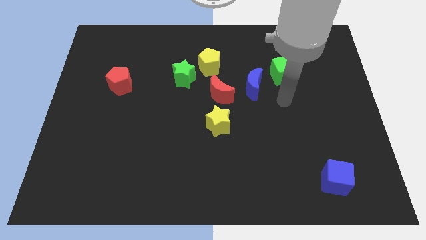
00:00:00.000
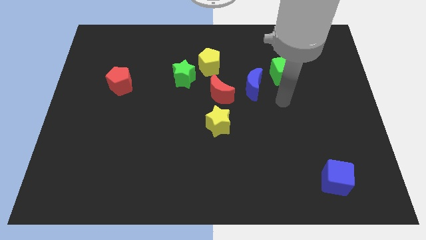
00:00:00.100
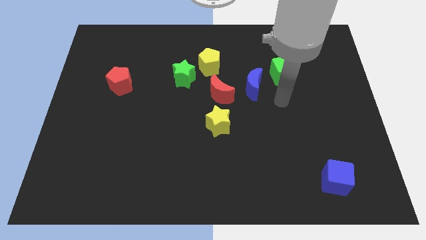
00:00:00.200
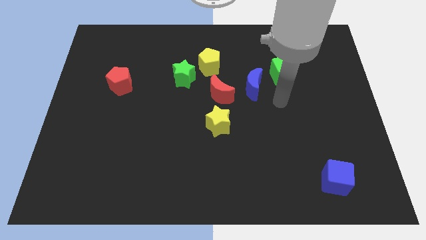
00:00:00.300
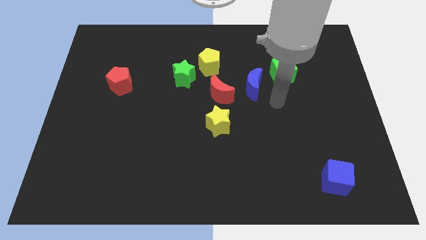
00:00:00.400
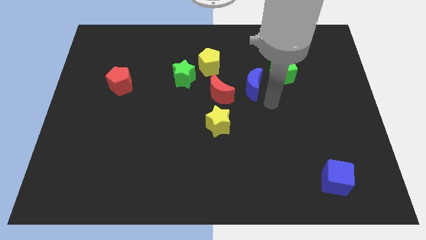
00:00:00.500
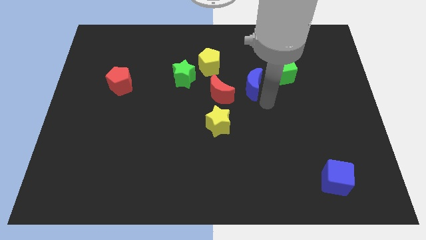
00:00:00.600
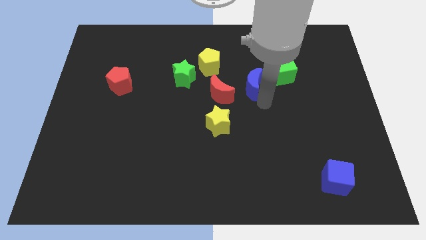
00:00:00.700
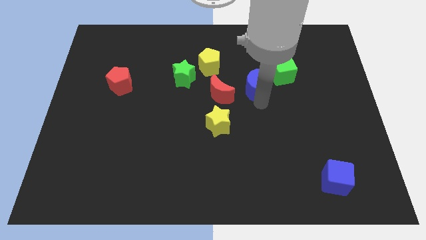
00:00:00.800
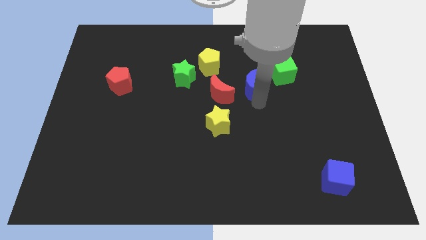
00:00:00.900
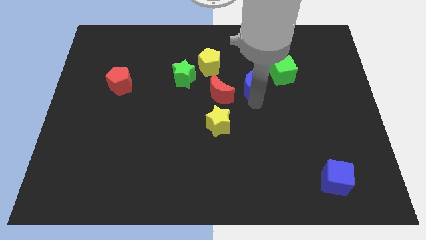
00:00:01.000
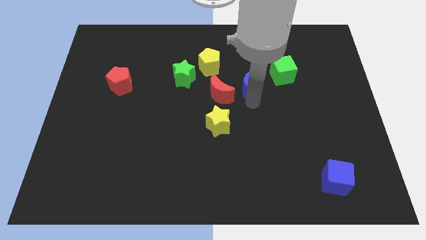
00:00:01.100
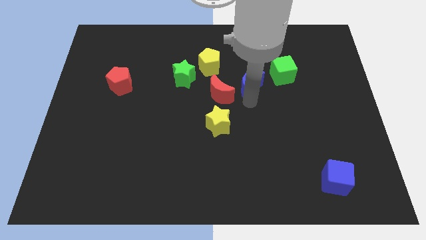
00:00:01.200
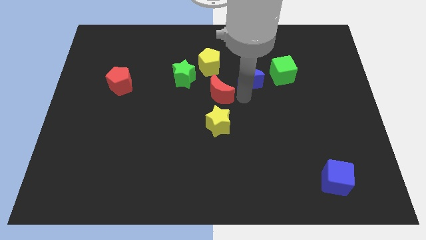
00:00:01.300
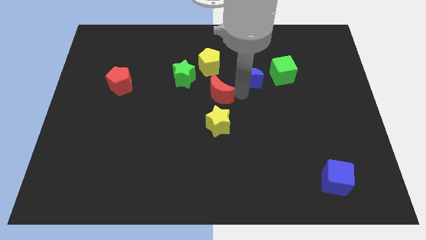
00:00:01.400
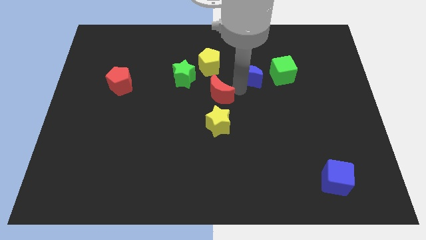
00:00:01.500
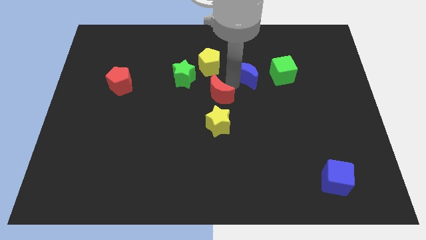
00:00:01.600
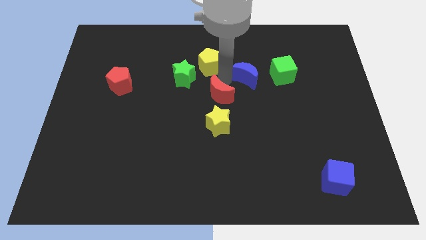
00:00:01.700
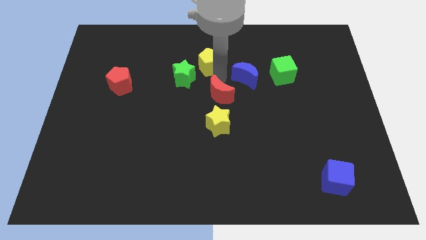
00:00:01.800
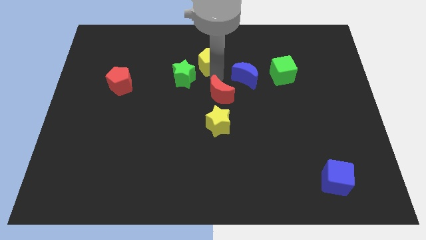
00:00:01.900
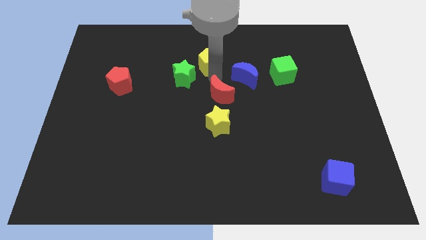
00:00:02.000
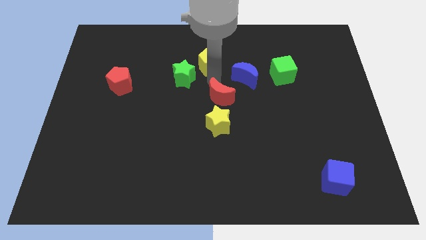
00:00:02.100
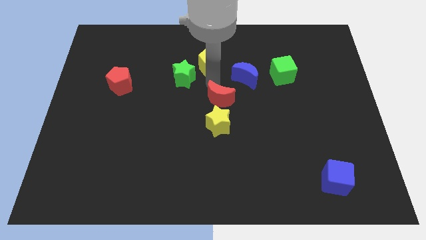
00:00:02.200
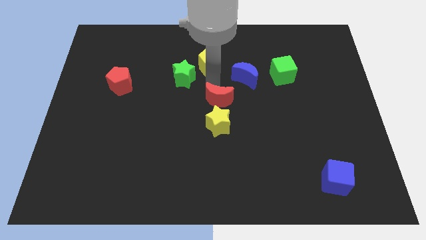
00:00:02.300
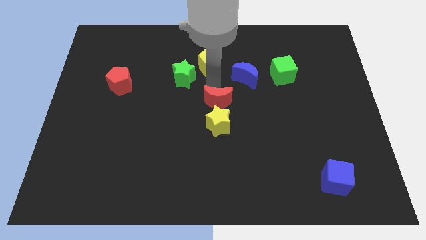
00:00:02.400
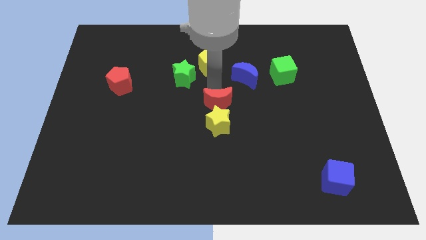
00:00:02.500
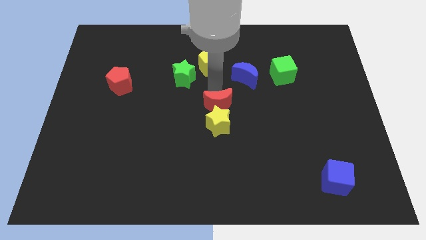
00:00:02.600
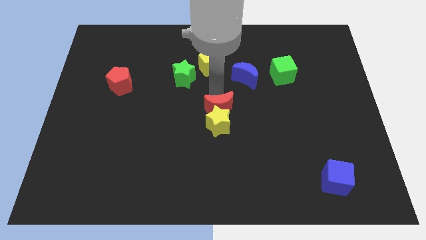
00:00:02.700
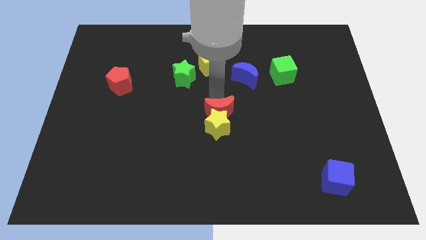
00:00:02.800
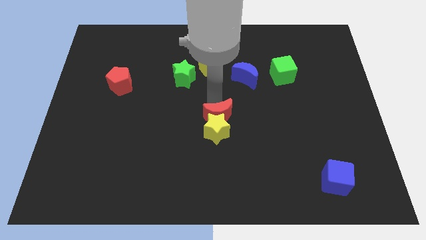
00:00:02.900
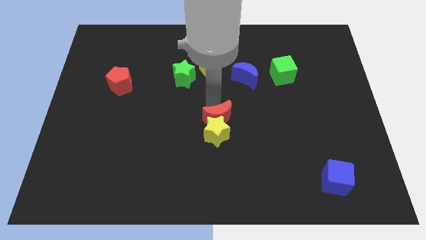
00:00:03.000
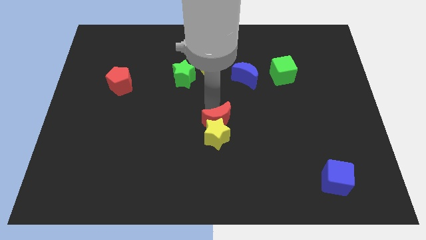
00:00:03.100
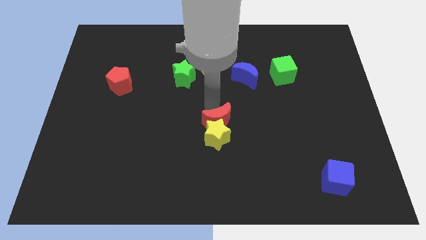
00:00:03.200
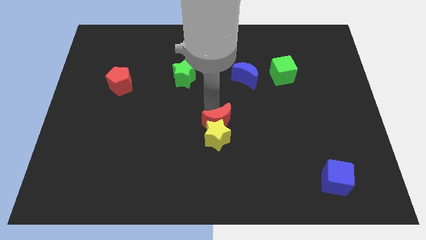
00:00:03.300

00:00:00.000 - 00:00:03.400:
push the red crescent to the top of the yellow star

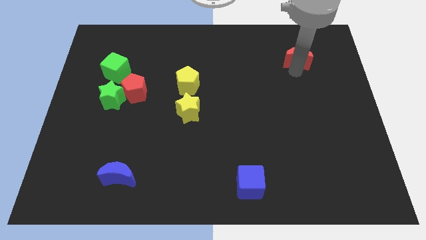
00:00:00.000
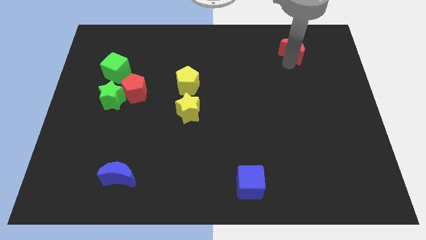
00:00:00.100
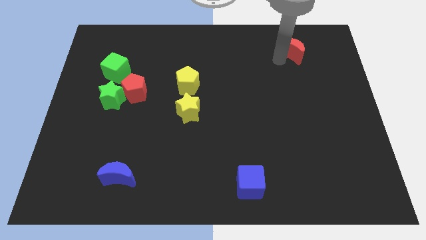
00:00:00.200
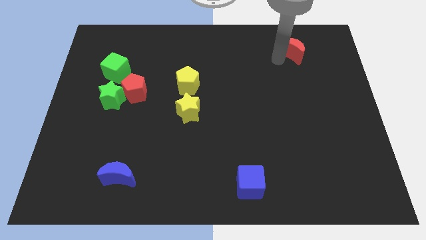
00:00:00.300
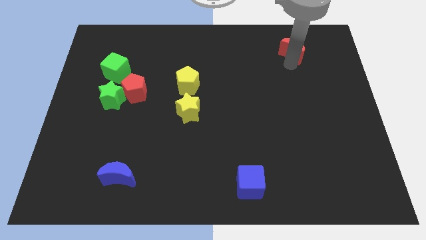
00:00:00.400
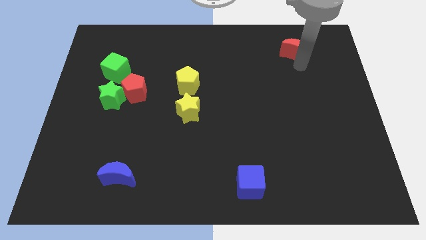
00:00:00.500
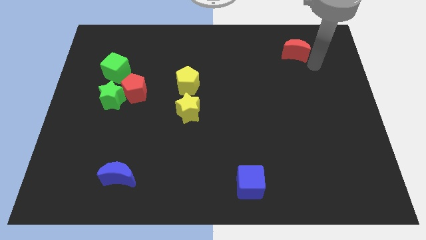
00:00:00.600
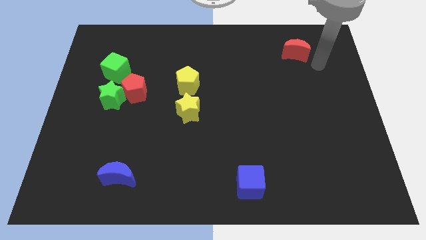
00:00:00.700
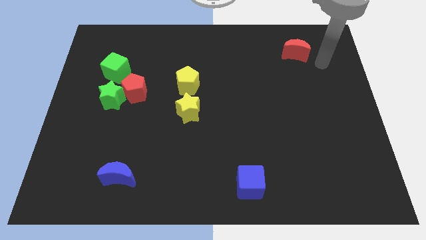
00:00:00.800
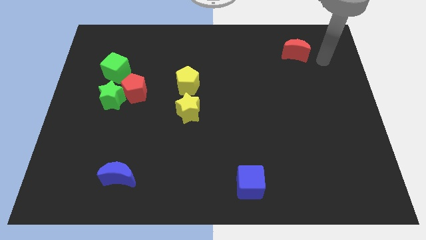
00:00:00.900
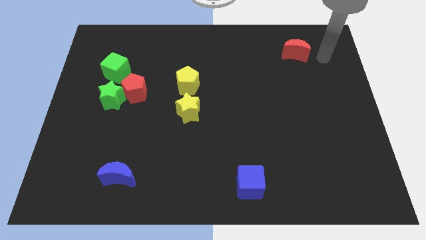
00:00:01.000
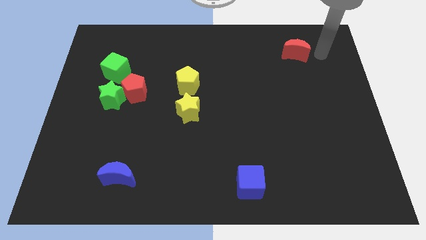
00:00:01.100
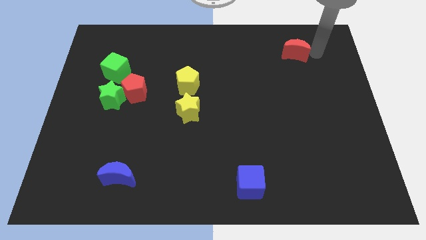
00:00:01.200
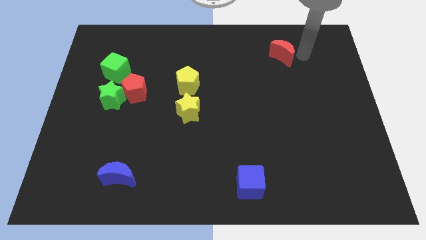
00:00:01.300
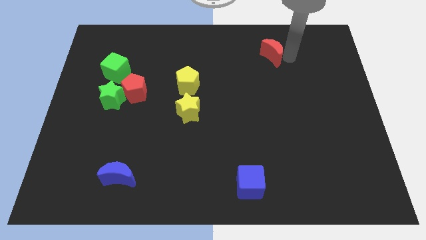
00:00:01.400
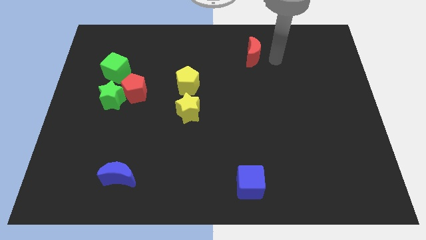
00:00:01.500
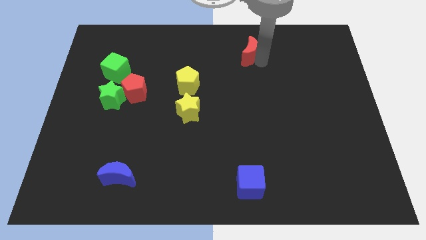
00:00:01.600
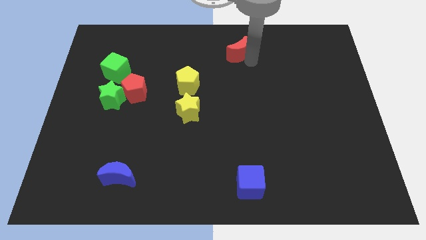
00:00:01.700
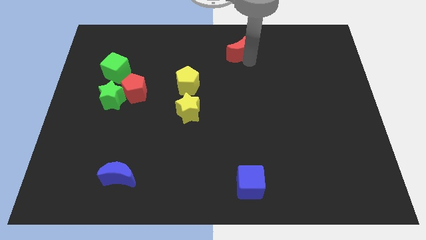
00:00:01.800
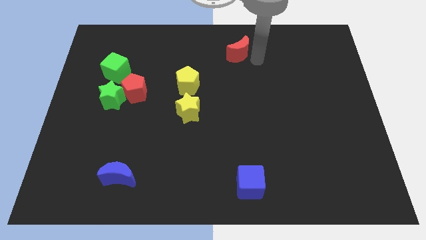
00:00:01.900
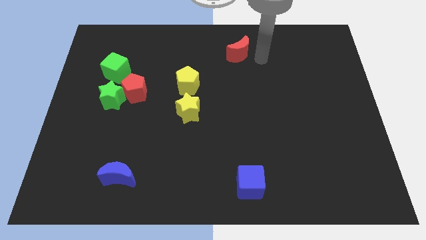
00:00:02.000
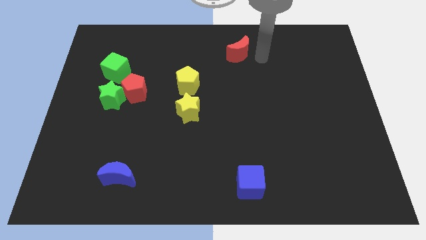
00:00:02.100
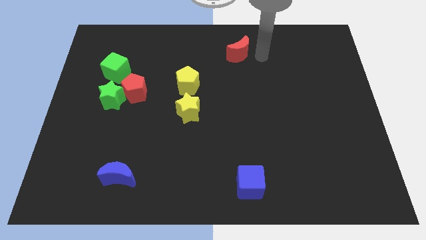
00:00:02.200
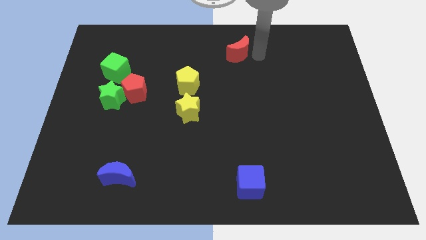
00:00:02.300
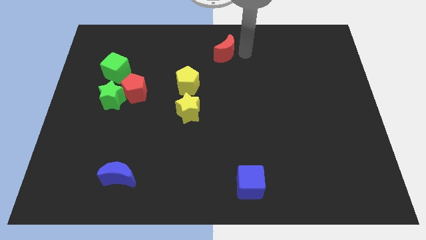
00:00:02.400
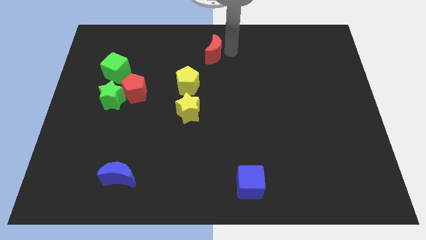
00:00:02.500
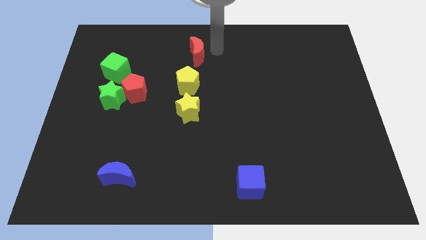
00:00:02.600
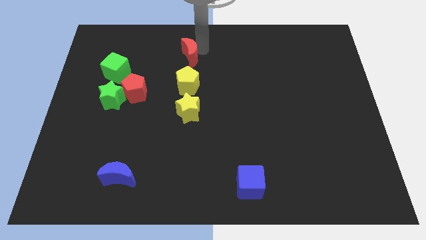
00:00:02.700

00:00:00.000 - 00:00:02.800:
place the red moon above the yellow pentagon

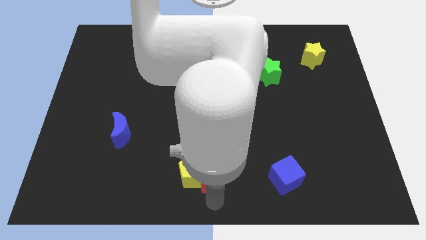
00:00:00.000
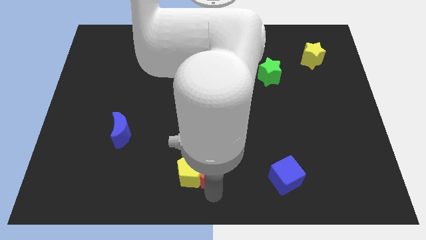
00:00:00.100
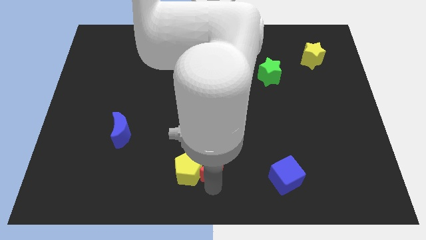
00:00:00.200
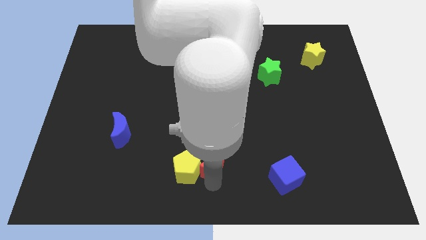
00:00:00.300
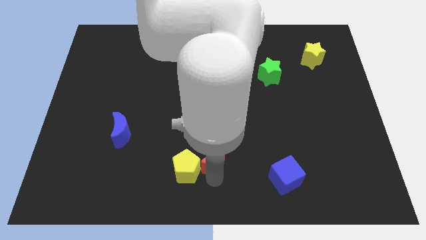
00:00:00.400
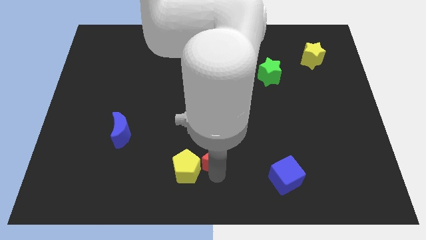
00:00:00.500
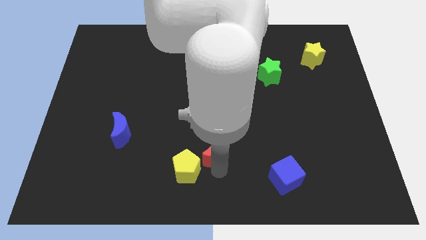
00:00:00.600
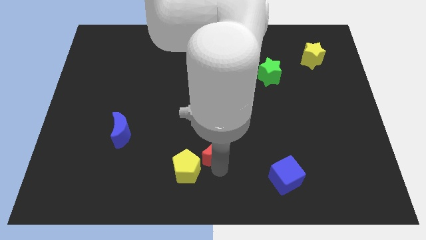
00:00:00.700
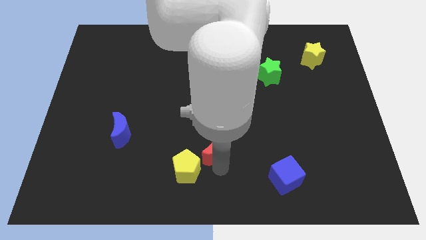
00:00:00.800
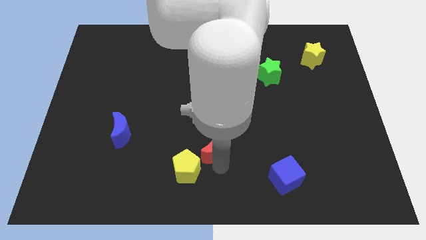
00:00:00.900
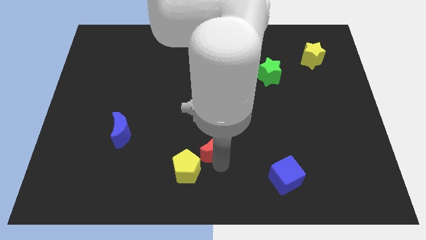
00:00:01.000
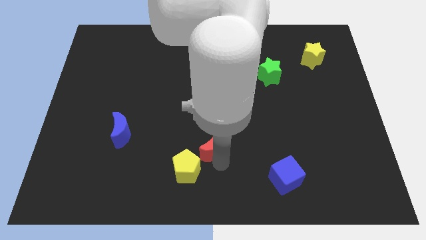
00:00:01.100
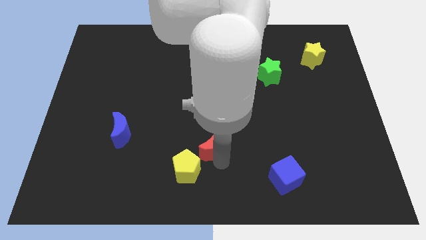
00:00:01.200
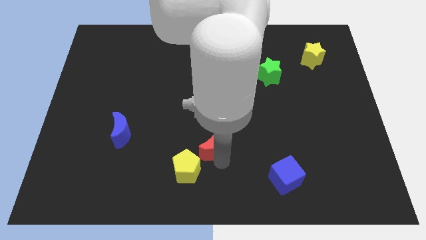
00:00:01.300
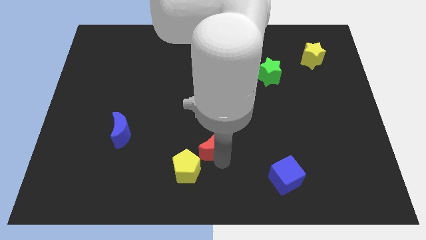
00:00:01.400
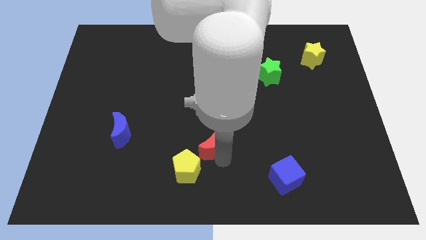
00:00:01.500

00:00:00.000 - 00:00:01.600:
slide the red crescent to the top right side of the yellow pentagon

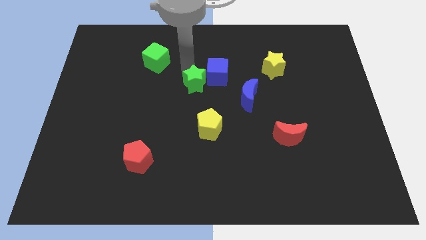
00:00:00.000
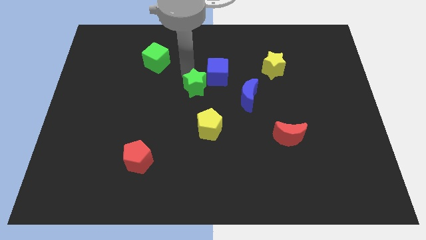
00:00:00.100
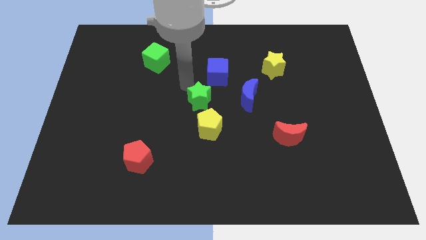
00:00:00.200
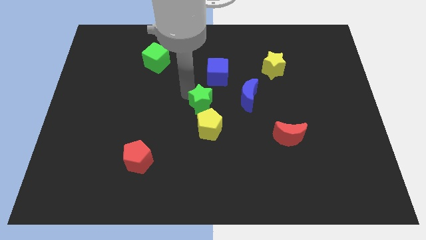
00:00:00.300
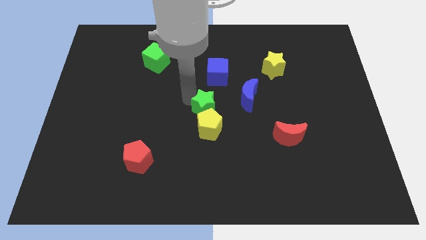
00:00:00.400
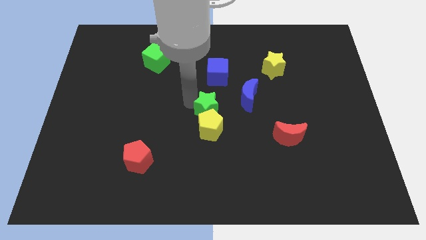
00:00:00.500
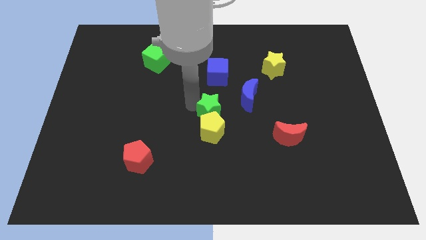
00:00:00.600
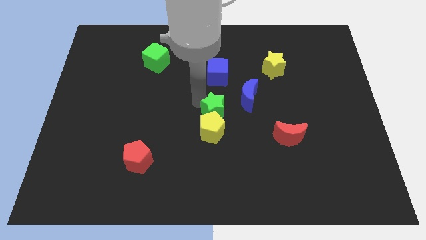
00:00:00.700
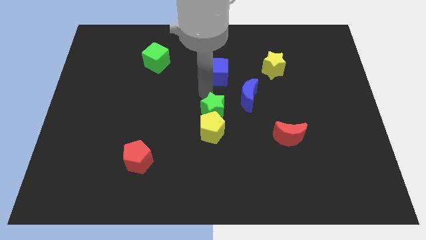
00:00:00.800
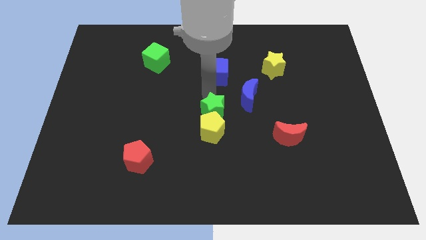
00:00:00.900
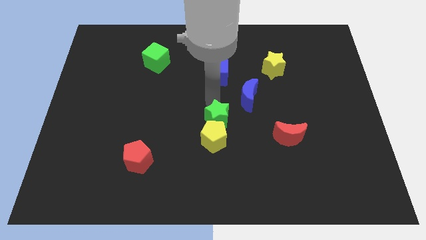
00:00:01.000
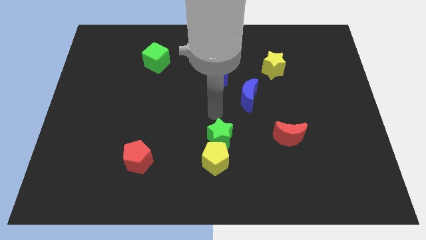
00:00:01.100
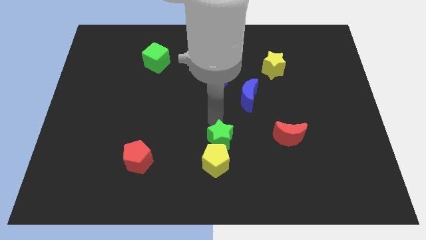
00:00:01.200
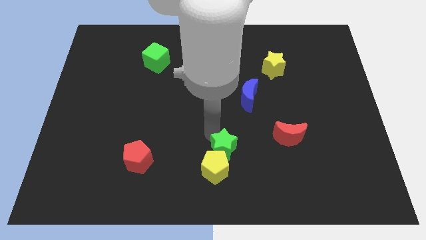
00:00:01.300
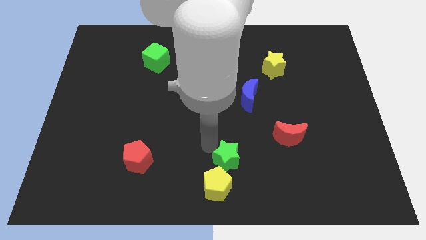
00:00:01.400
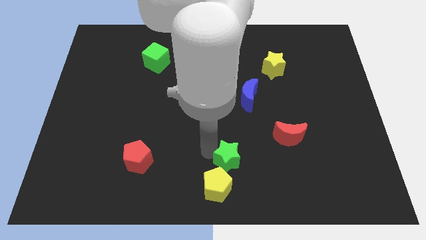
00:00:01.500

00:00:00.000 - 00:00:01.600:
push the green star into yellow pentagon
